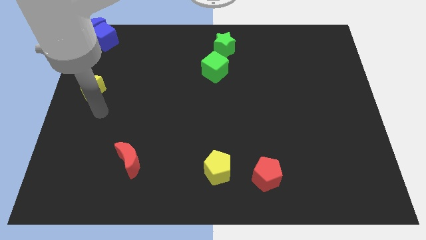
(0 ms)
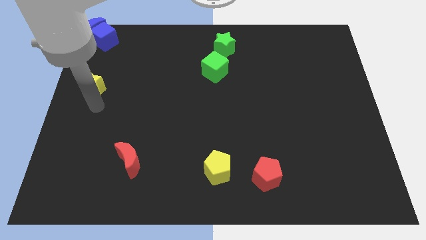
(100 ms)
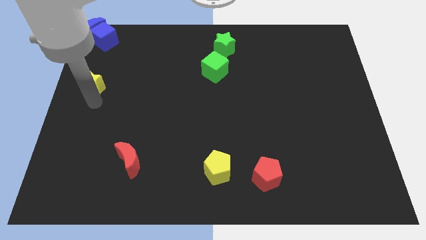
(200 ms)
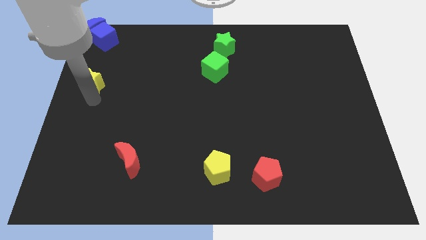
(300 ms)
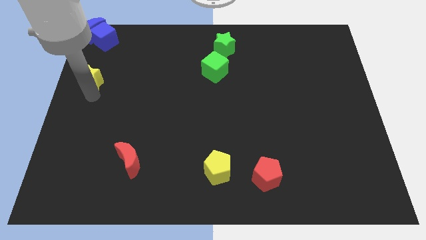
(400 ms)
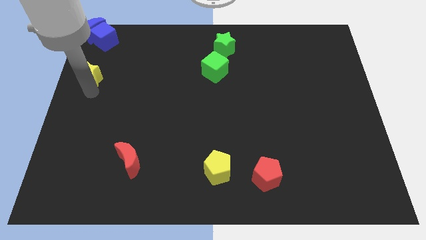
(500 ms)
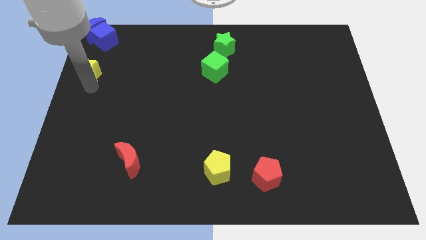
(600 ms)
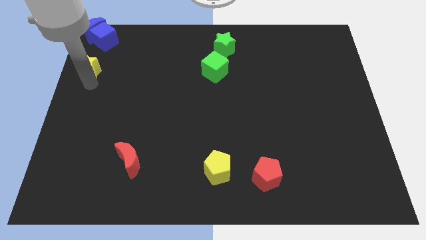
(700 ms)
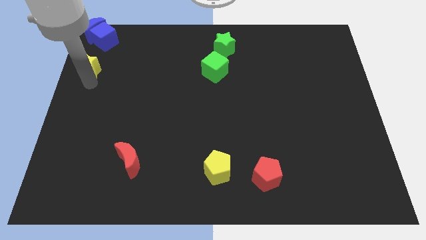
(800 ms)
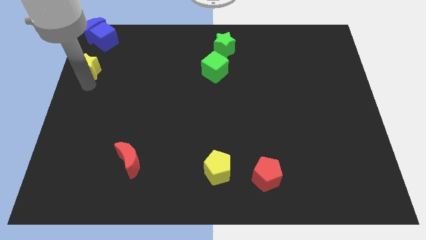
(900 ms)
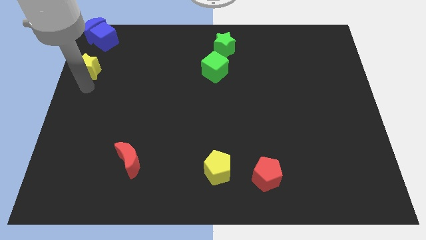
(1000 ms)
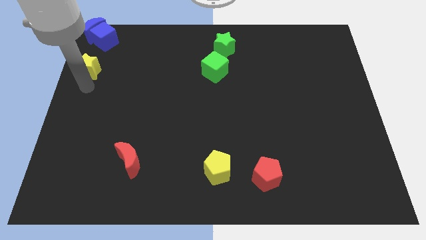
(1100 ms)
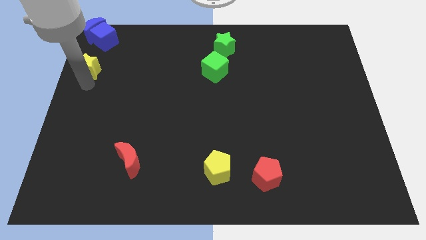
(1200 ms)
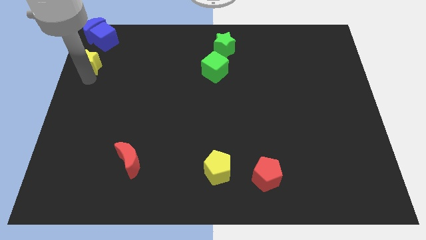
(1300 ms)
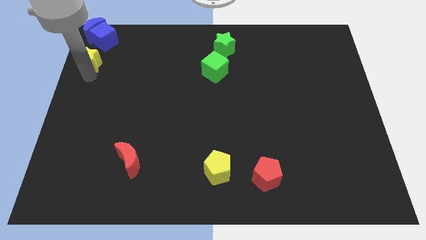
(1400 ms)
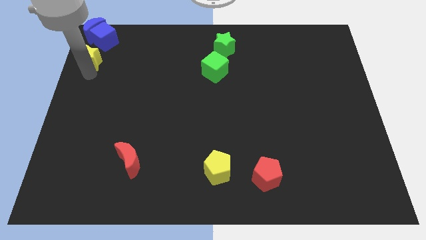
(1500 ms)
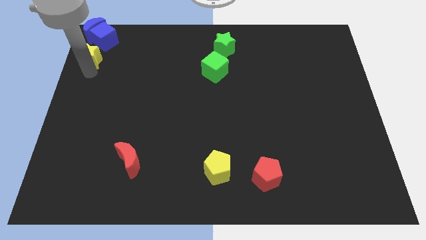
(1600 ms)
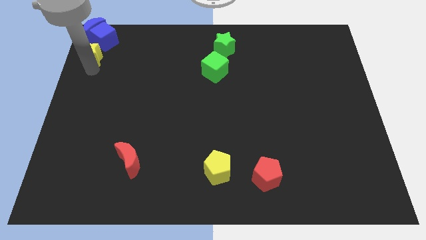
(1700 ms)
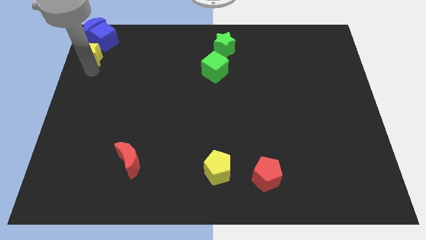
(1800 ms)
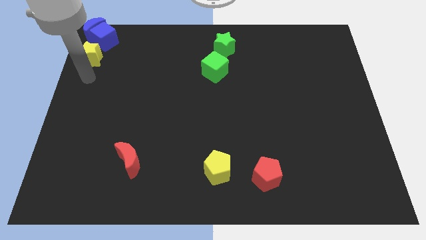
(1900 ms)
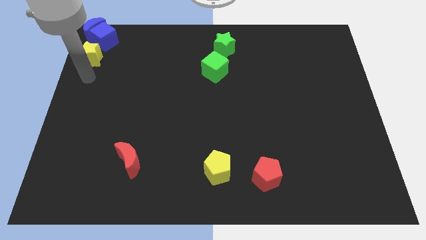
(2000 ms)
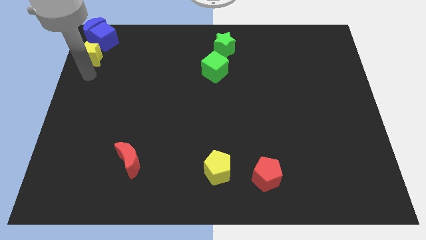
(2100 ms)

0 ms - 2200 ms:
move the yellow star near to the blue blocks

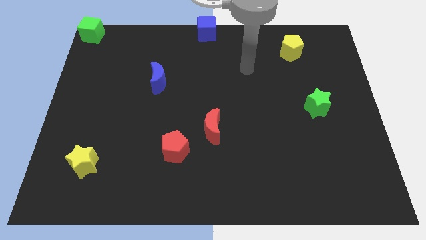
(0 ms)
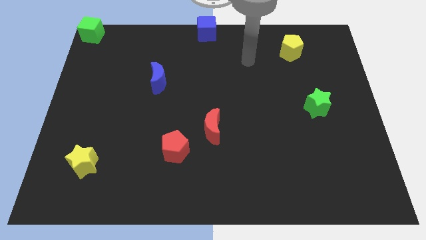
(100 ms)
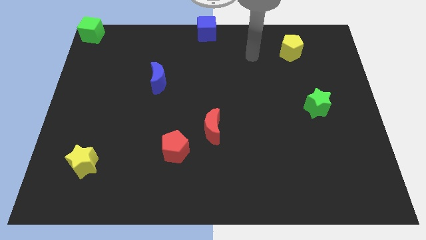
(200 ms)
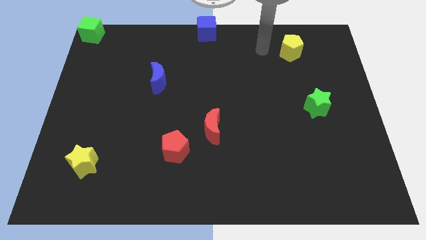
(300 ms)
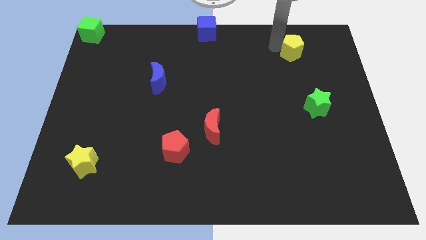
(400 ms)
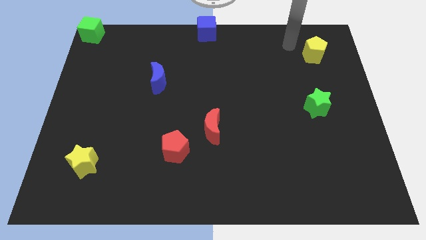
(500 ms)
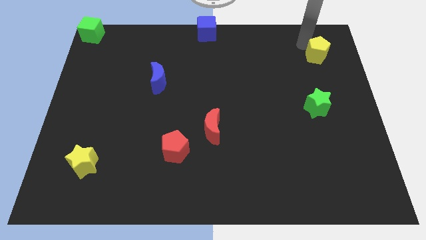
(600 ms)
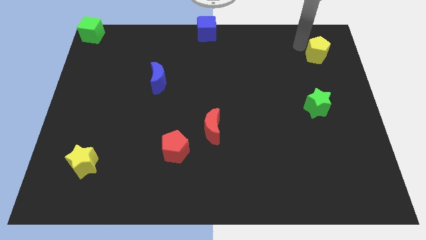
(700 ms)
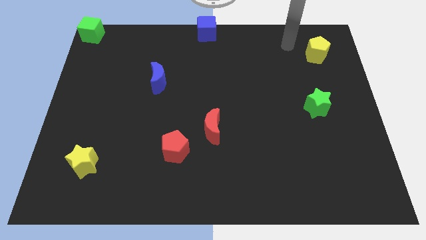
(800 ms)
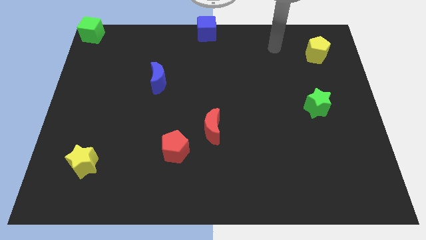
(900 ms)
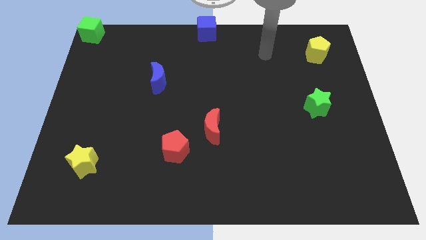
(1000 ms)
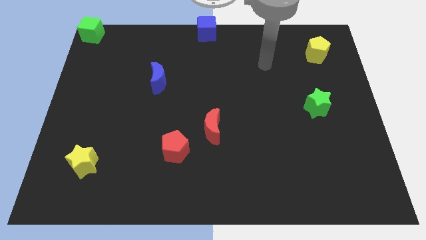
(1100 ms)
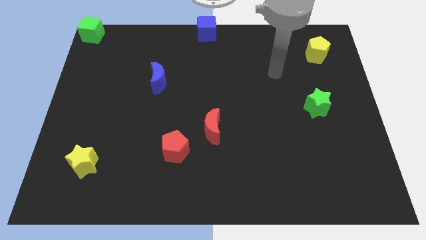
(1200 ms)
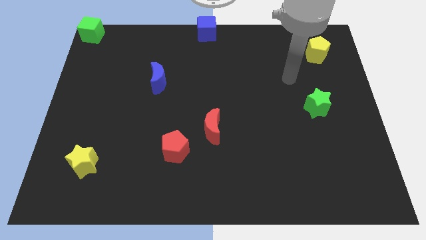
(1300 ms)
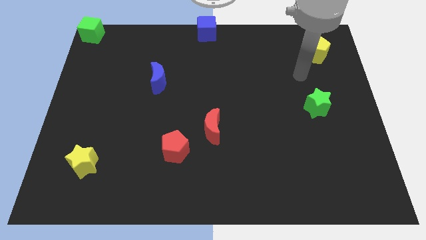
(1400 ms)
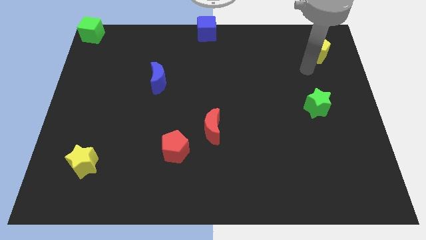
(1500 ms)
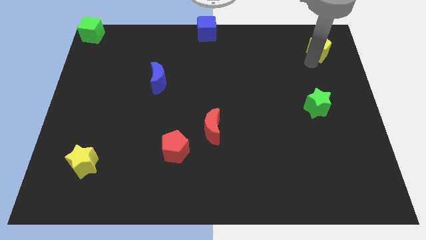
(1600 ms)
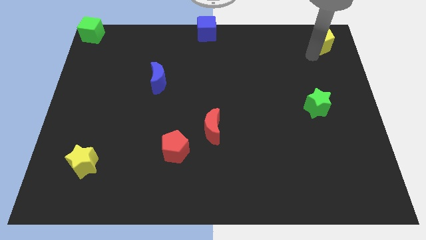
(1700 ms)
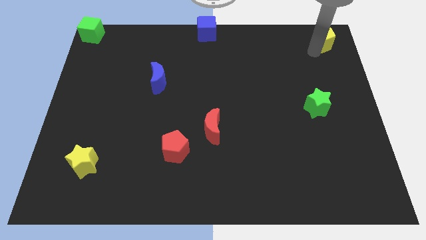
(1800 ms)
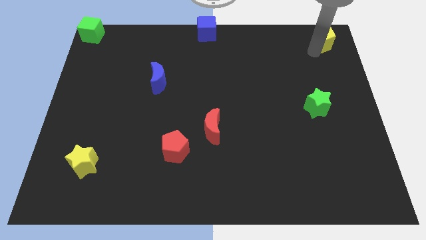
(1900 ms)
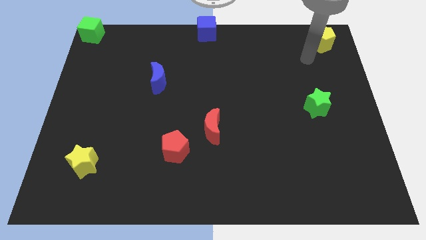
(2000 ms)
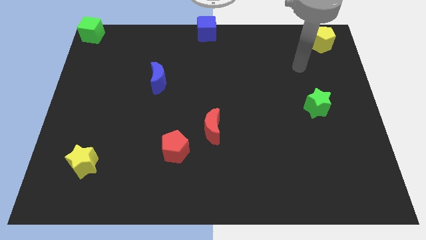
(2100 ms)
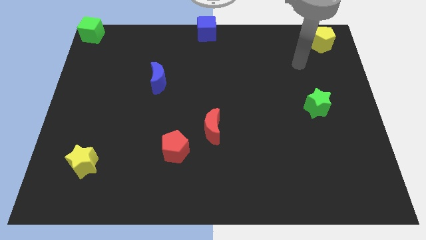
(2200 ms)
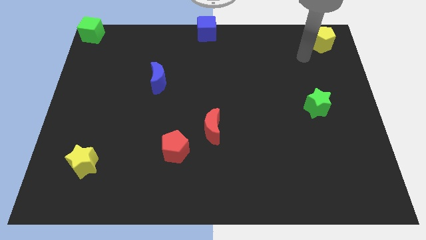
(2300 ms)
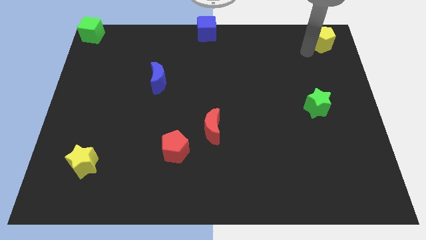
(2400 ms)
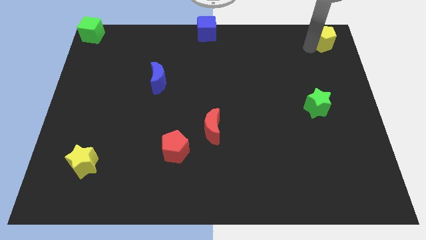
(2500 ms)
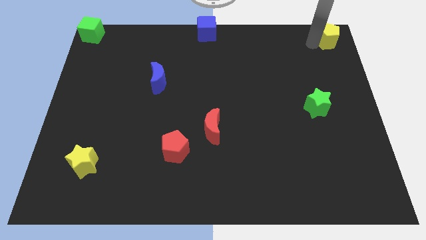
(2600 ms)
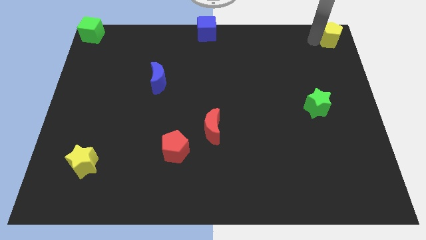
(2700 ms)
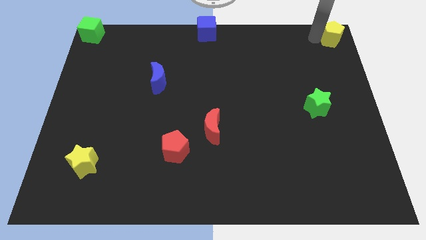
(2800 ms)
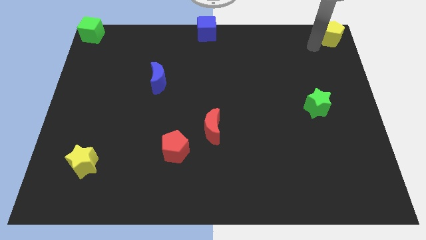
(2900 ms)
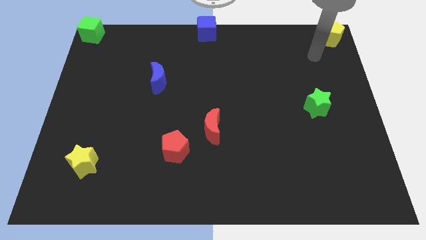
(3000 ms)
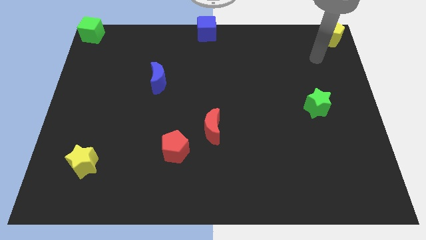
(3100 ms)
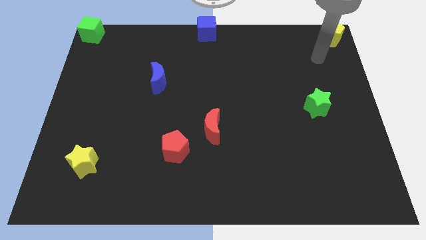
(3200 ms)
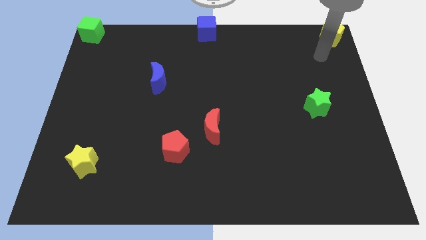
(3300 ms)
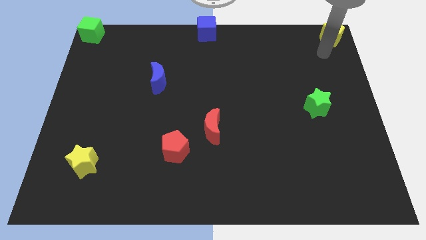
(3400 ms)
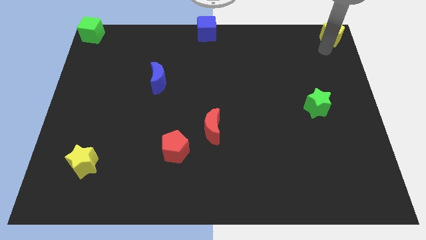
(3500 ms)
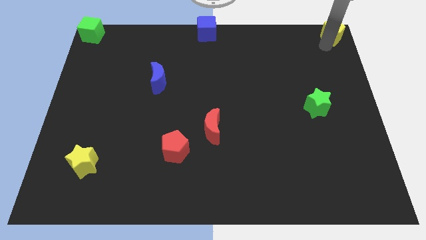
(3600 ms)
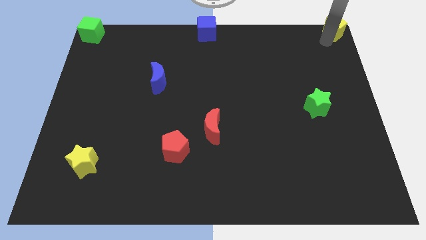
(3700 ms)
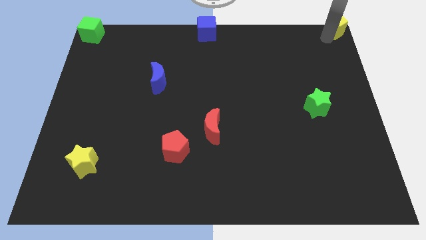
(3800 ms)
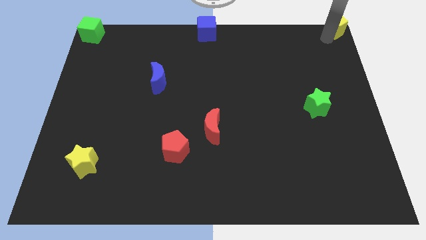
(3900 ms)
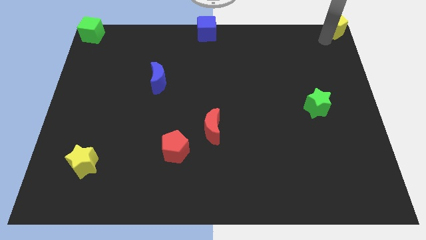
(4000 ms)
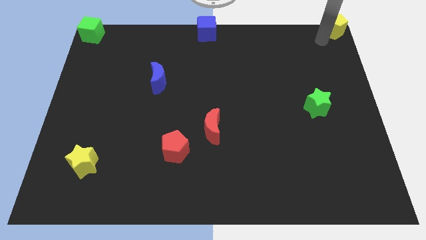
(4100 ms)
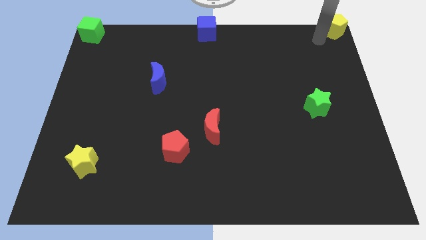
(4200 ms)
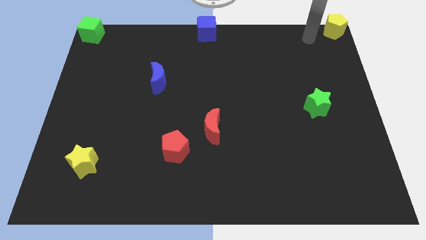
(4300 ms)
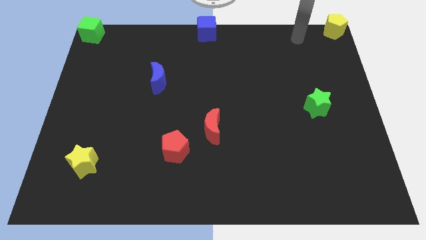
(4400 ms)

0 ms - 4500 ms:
place the yellow pentagon at the top right corner of the board

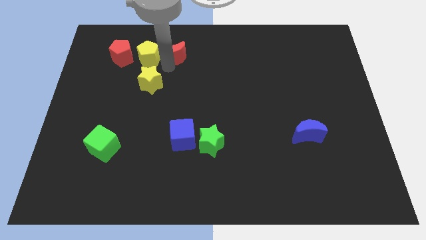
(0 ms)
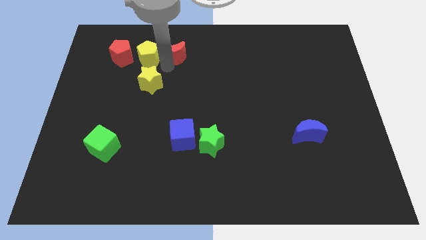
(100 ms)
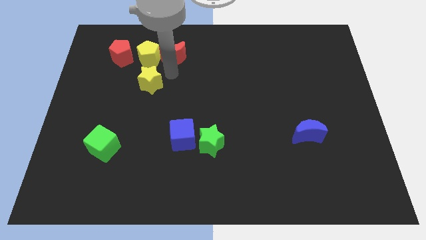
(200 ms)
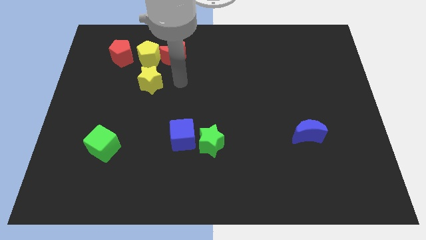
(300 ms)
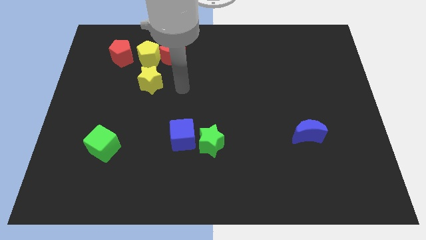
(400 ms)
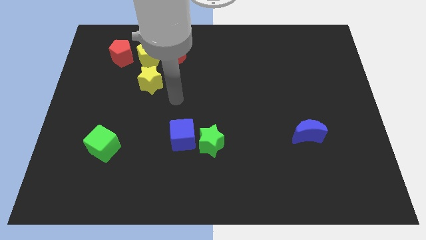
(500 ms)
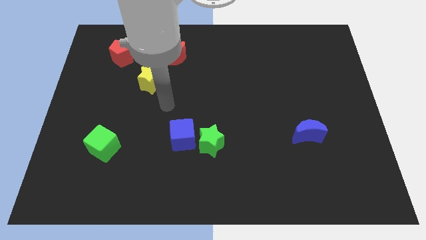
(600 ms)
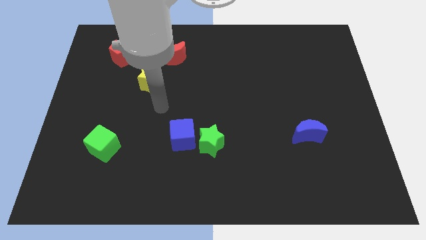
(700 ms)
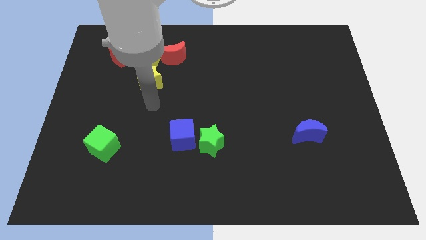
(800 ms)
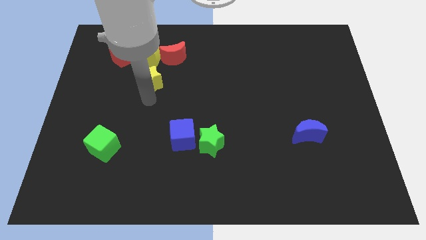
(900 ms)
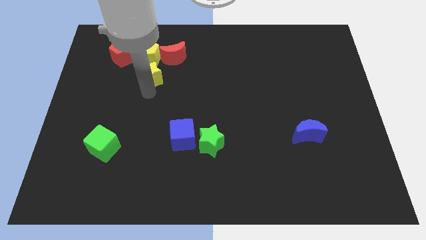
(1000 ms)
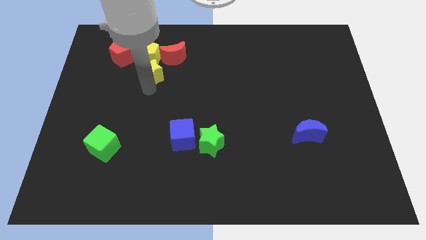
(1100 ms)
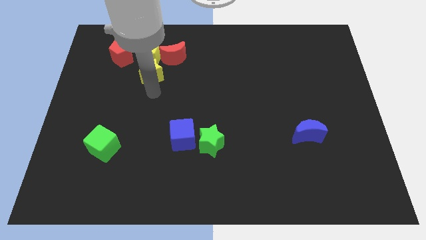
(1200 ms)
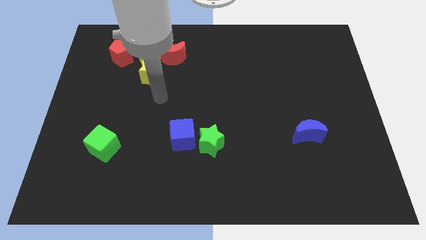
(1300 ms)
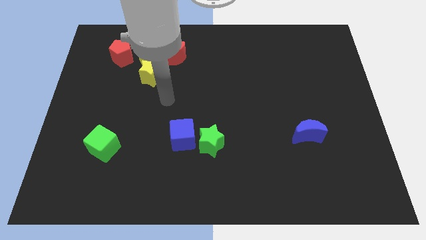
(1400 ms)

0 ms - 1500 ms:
move the yellow star close to the yellow pentagon

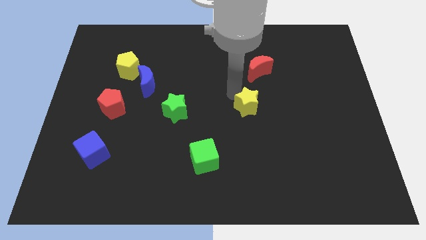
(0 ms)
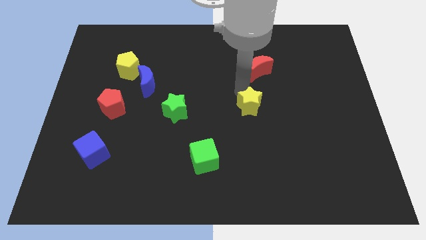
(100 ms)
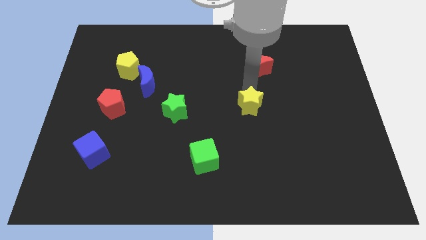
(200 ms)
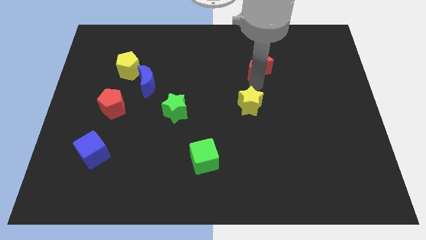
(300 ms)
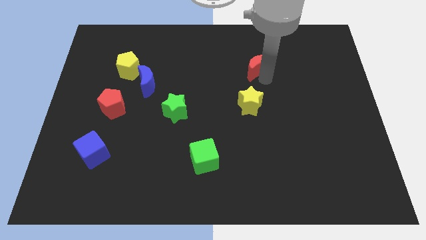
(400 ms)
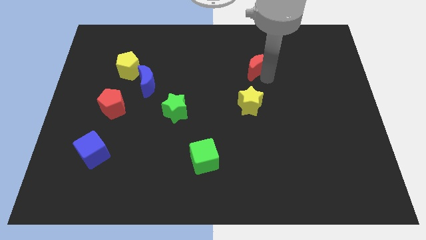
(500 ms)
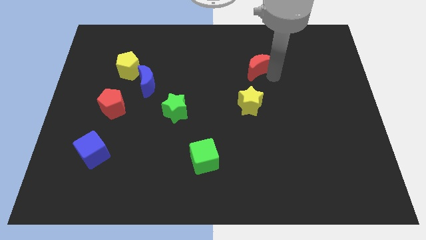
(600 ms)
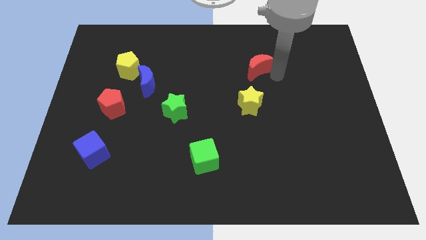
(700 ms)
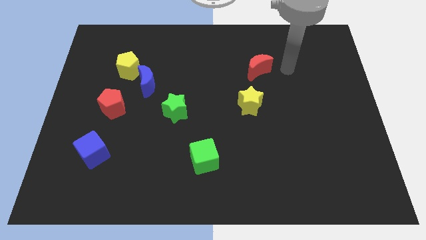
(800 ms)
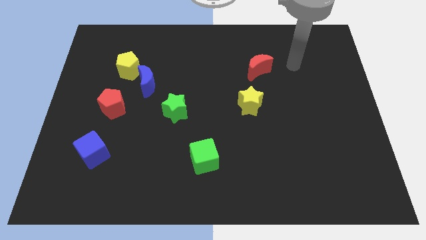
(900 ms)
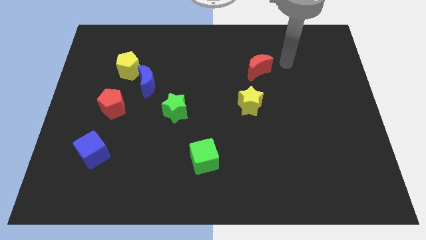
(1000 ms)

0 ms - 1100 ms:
touch the red moon
